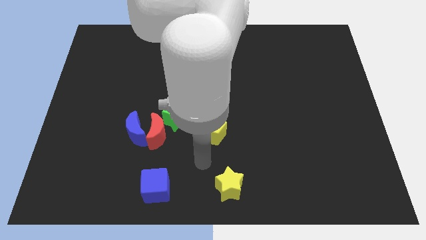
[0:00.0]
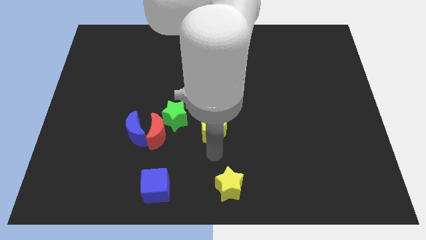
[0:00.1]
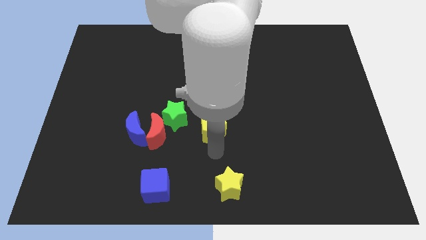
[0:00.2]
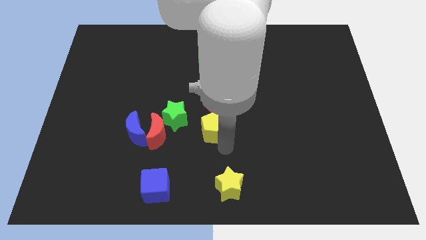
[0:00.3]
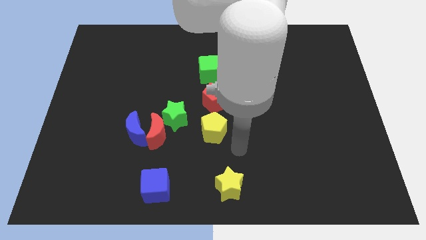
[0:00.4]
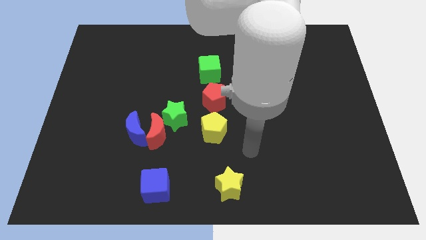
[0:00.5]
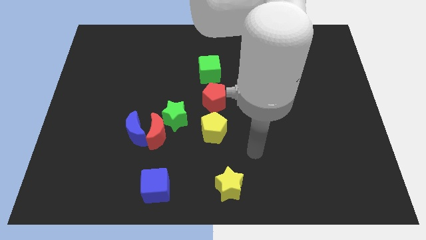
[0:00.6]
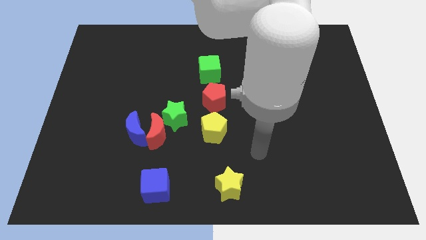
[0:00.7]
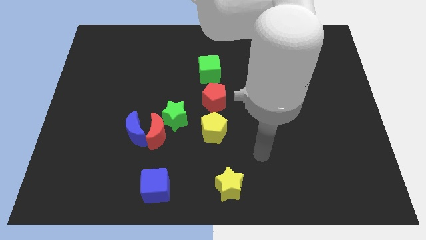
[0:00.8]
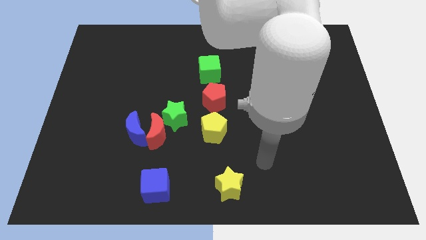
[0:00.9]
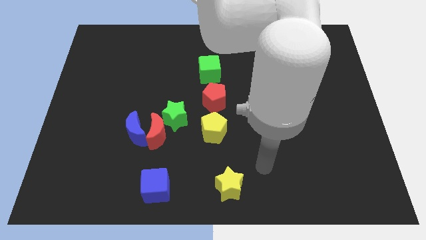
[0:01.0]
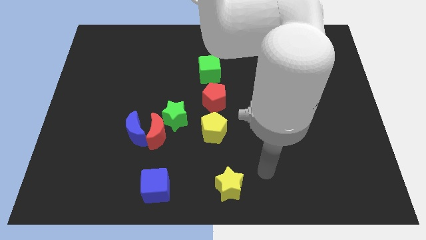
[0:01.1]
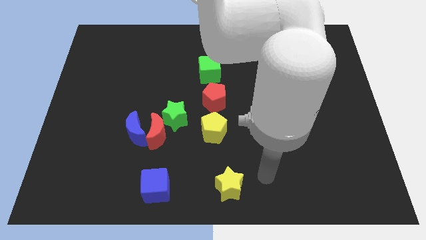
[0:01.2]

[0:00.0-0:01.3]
move your arm to the right of the yellow star

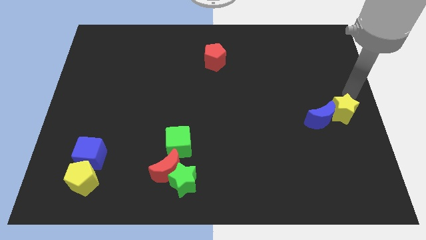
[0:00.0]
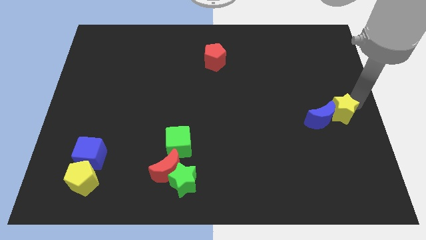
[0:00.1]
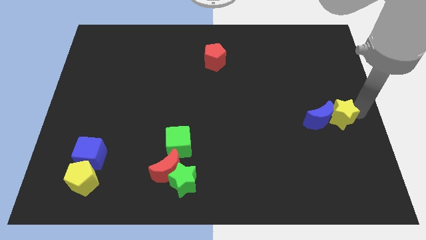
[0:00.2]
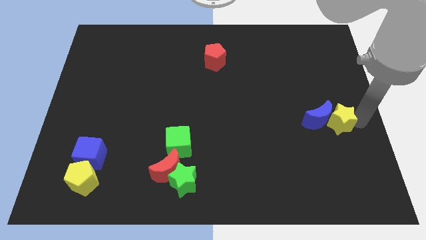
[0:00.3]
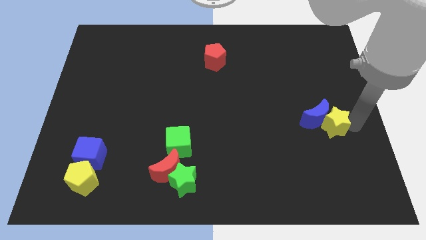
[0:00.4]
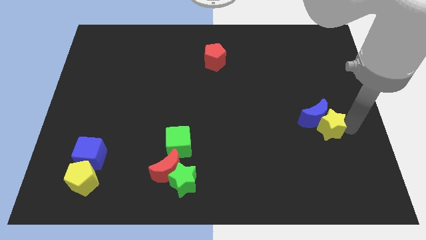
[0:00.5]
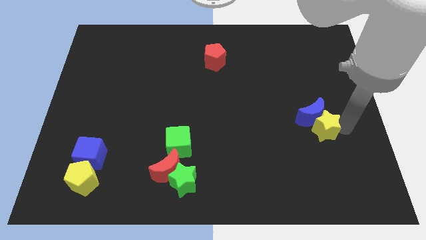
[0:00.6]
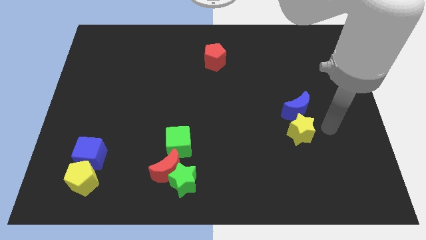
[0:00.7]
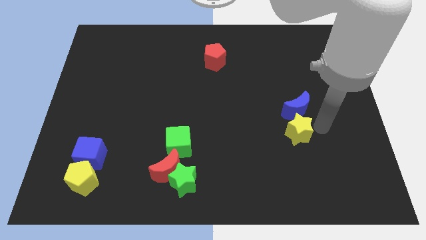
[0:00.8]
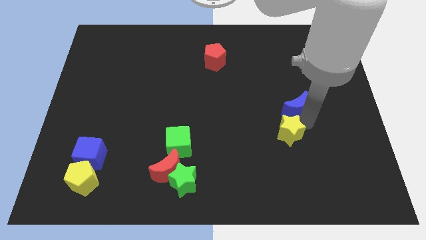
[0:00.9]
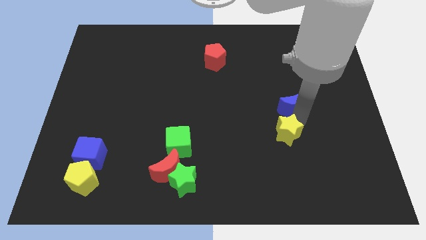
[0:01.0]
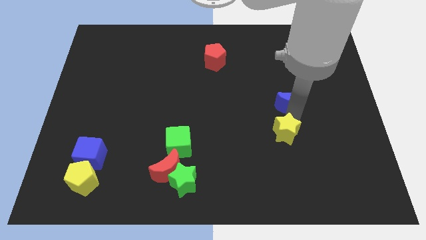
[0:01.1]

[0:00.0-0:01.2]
put yellow star below blue crescent

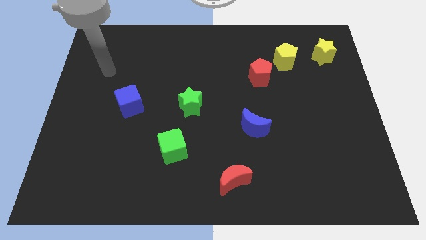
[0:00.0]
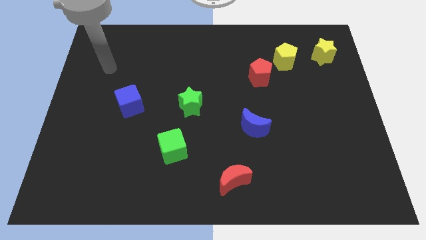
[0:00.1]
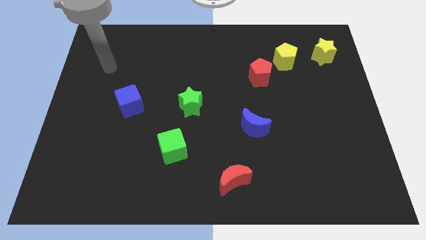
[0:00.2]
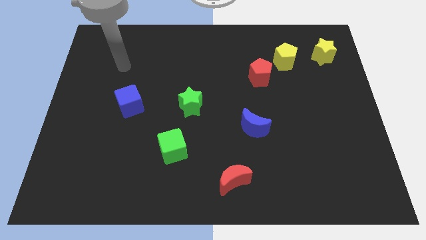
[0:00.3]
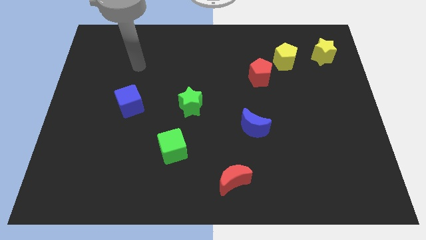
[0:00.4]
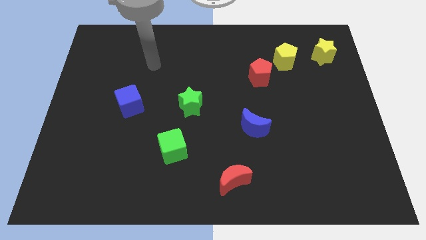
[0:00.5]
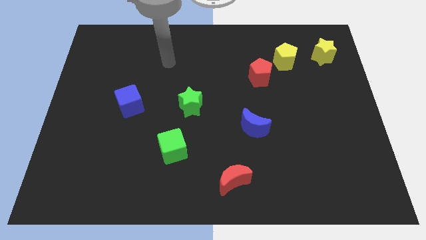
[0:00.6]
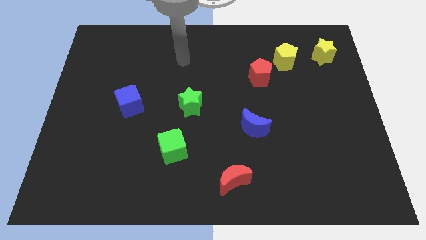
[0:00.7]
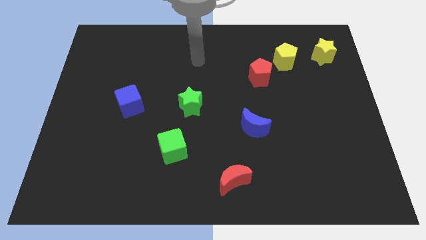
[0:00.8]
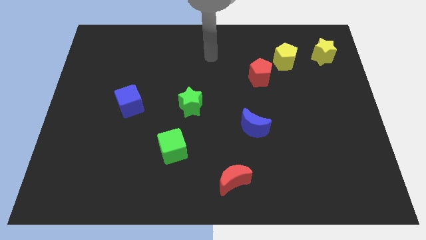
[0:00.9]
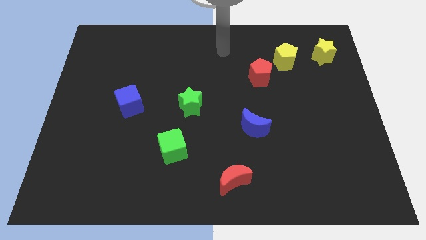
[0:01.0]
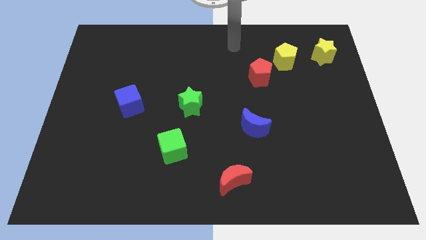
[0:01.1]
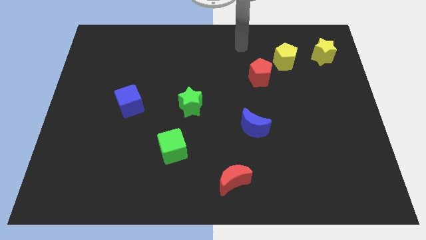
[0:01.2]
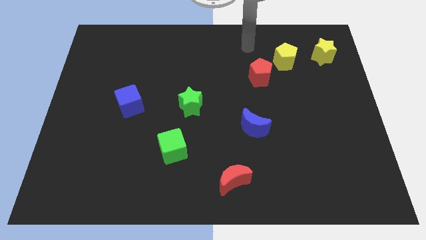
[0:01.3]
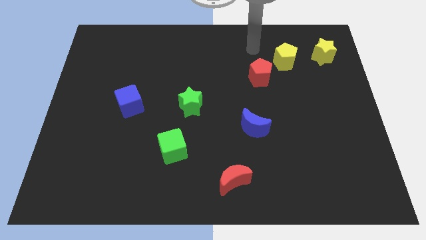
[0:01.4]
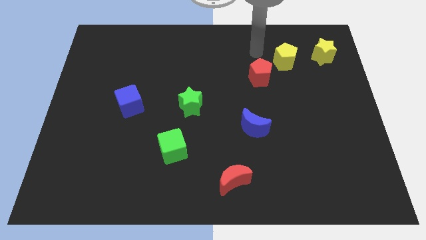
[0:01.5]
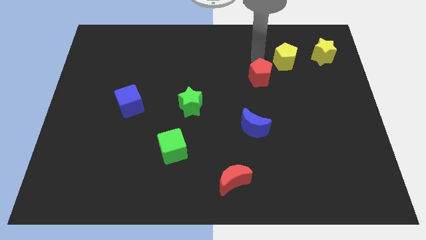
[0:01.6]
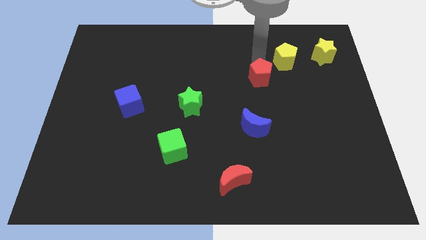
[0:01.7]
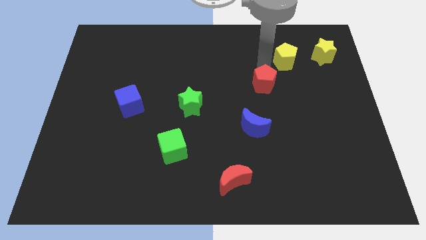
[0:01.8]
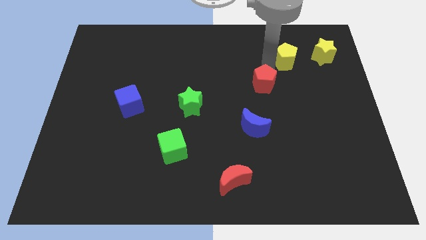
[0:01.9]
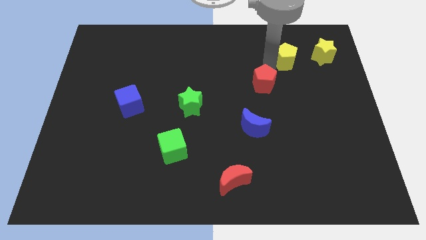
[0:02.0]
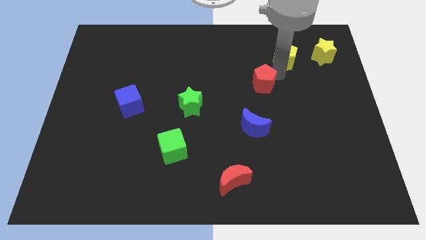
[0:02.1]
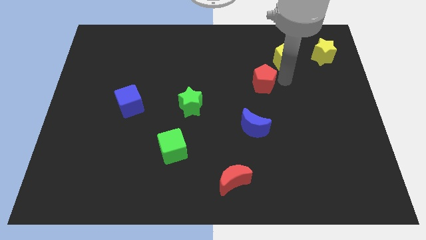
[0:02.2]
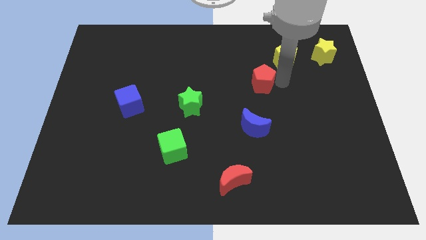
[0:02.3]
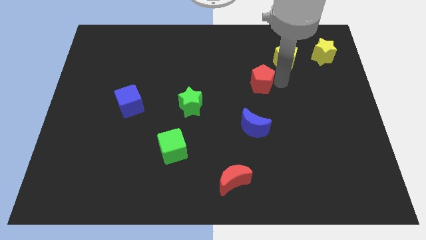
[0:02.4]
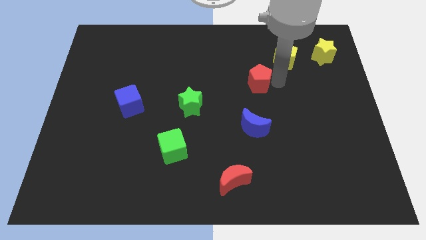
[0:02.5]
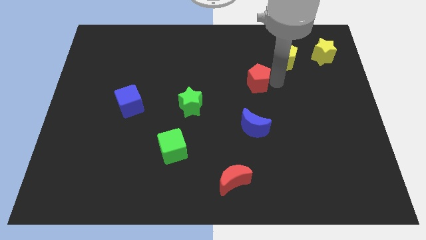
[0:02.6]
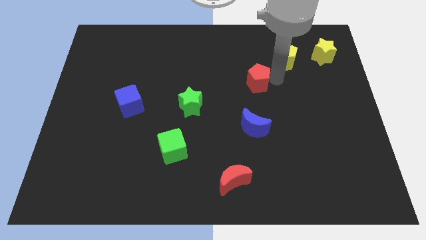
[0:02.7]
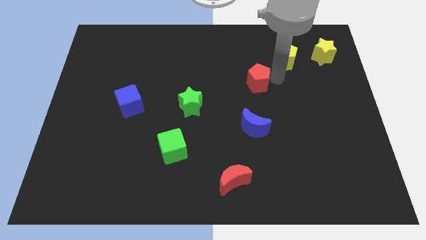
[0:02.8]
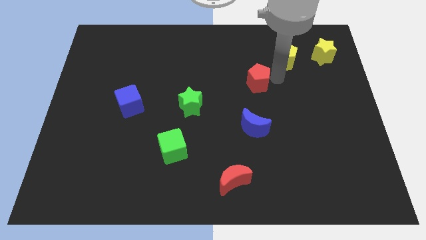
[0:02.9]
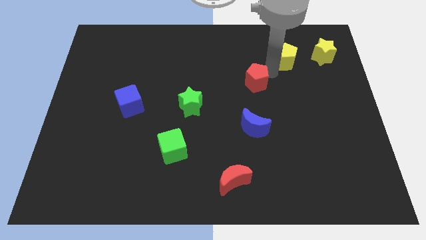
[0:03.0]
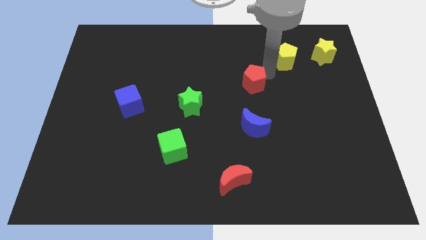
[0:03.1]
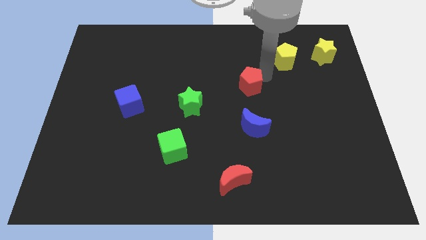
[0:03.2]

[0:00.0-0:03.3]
slightly move the red pentagon towards the blue moon

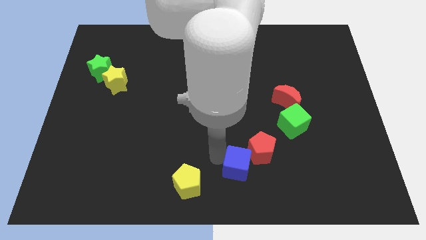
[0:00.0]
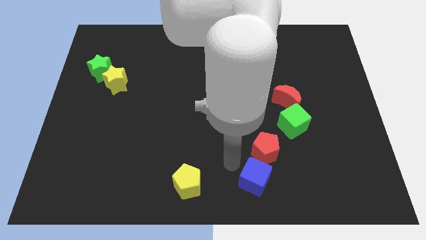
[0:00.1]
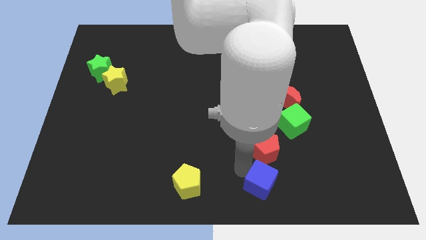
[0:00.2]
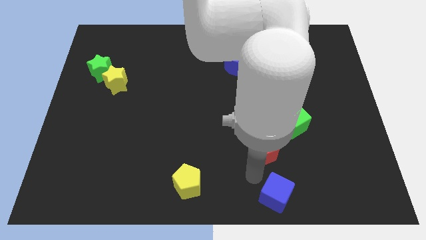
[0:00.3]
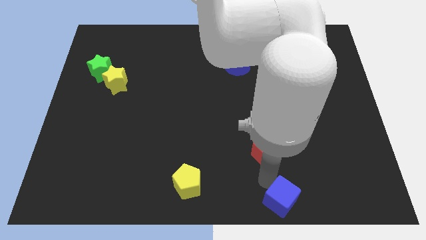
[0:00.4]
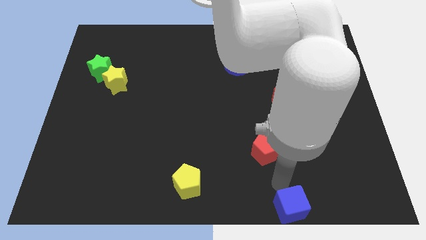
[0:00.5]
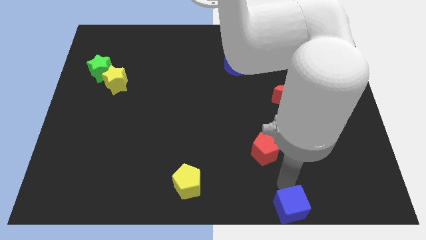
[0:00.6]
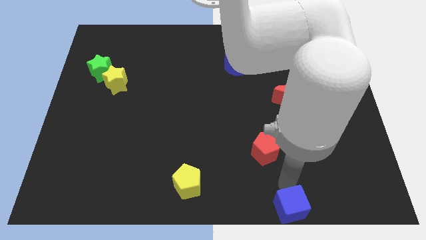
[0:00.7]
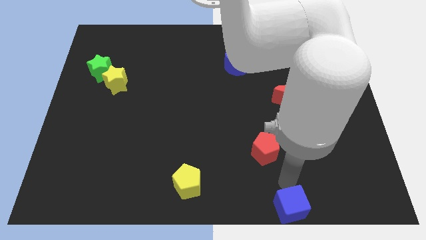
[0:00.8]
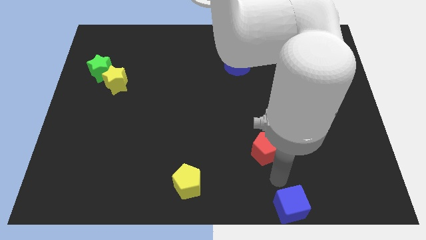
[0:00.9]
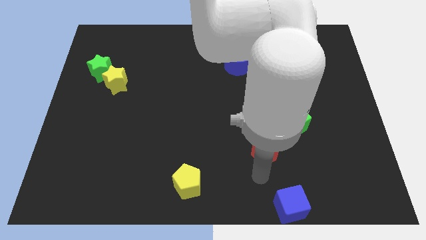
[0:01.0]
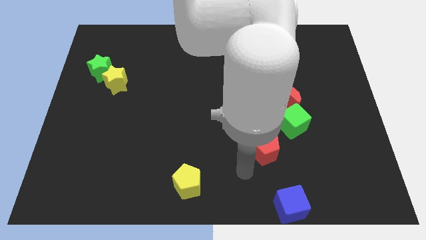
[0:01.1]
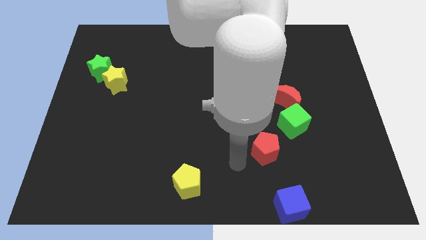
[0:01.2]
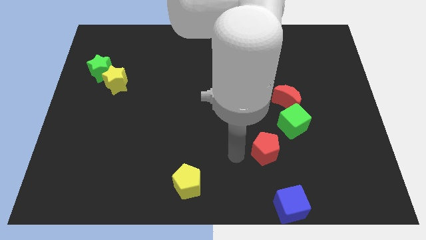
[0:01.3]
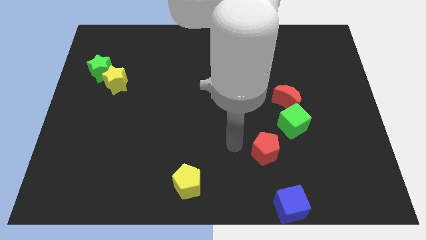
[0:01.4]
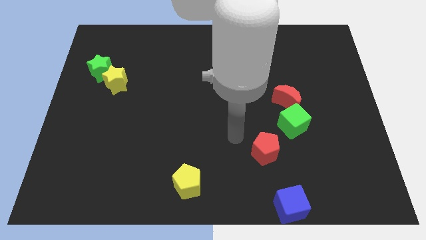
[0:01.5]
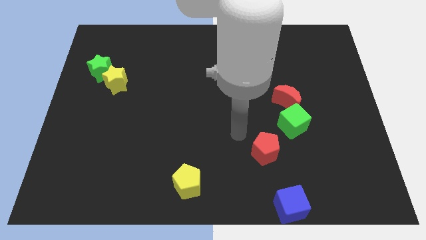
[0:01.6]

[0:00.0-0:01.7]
push the blue cube into the bottom

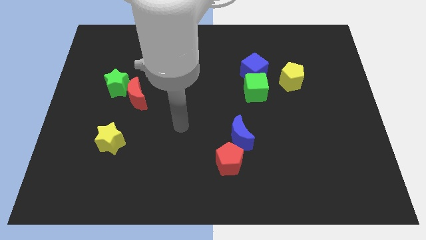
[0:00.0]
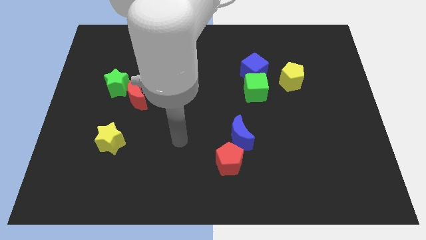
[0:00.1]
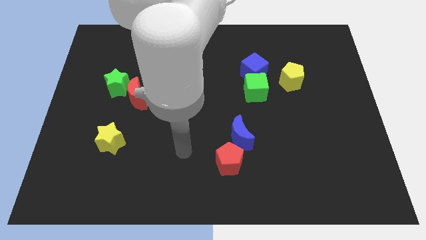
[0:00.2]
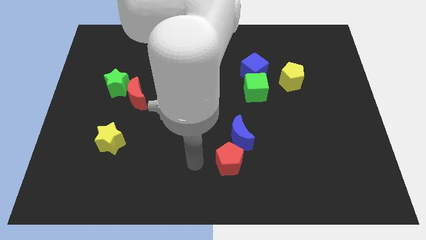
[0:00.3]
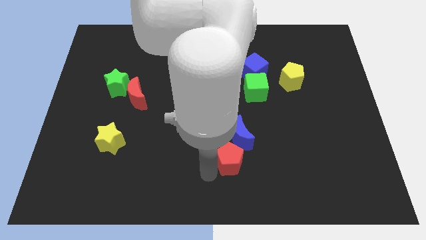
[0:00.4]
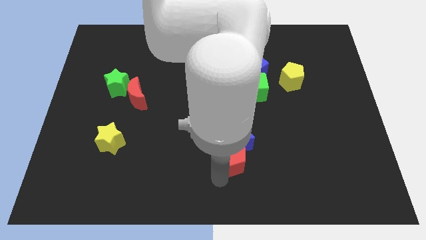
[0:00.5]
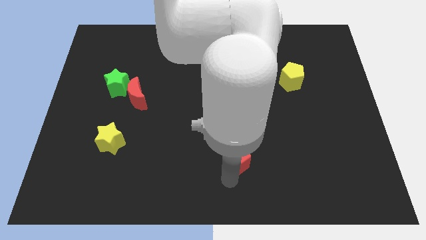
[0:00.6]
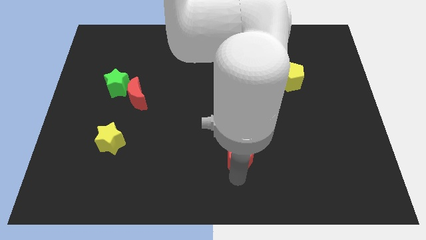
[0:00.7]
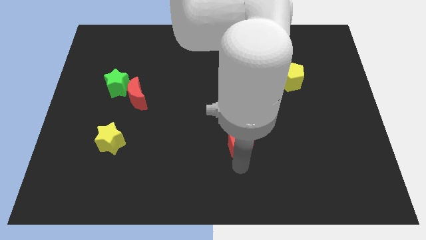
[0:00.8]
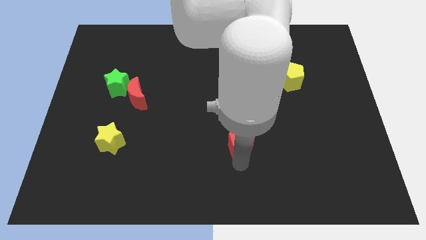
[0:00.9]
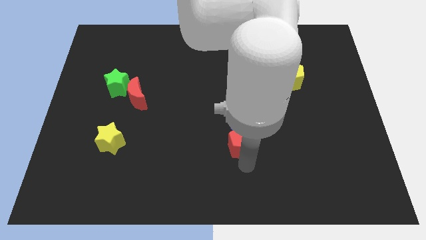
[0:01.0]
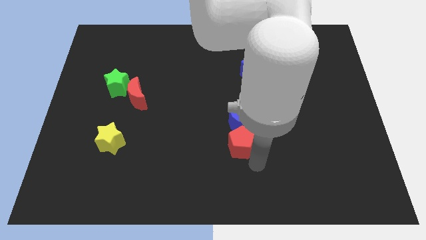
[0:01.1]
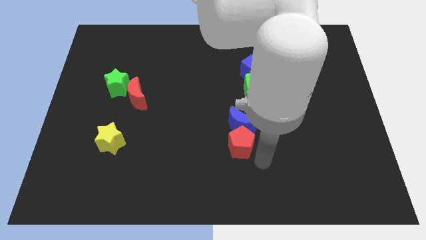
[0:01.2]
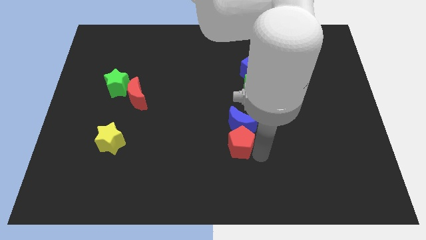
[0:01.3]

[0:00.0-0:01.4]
place the red pentagon below the blue crescent
